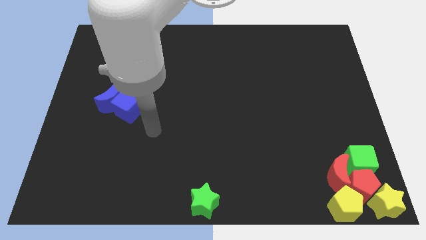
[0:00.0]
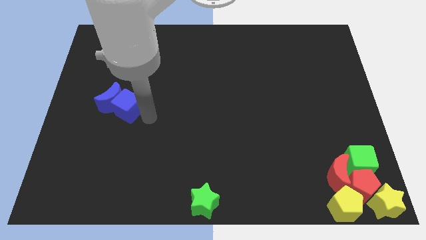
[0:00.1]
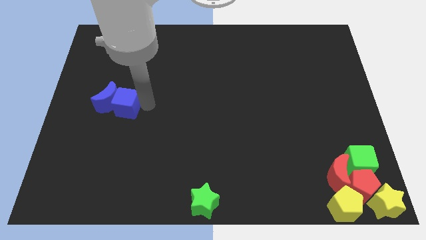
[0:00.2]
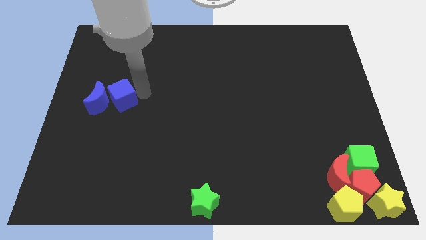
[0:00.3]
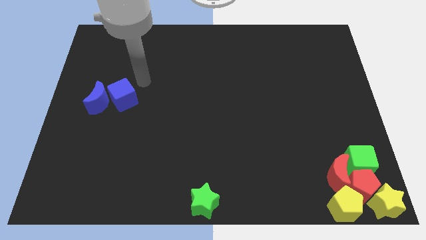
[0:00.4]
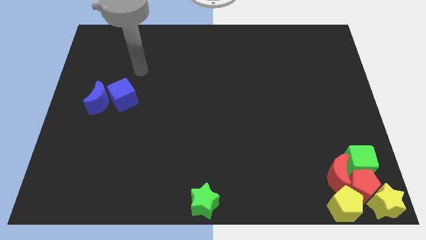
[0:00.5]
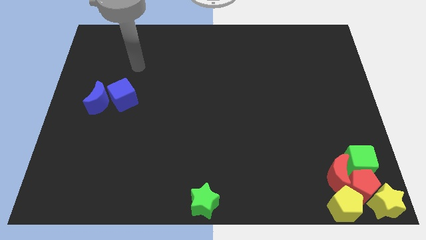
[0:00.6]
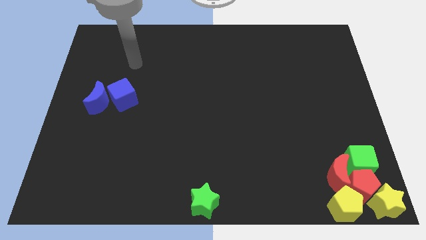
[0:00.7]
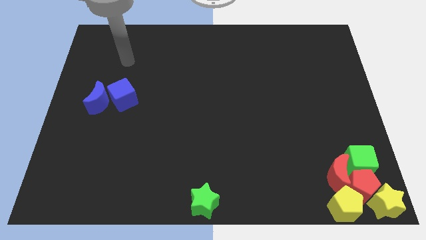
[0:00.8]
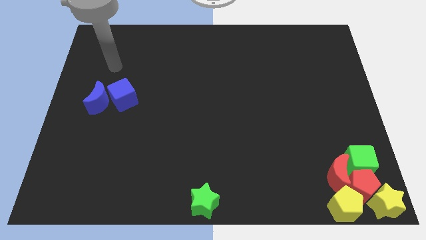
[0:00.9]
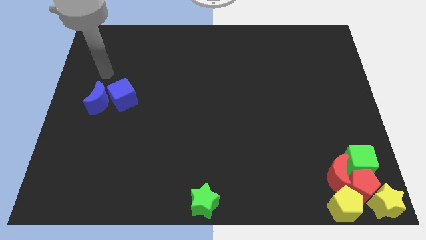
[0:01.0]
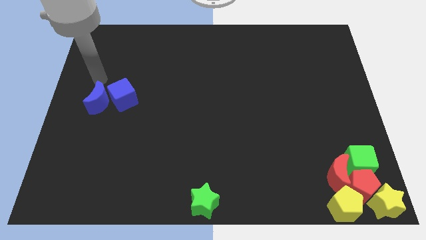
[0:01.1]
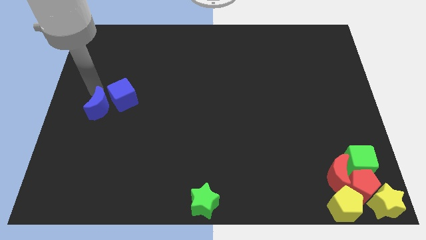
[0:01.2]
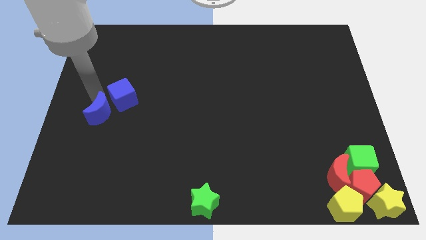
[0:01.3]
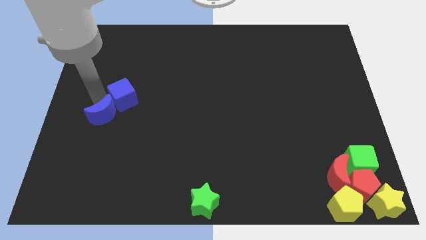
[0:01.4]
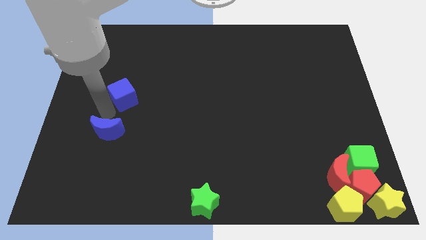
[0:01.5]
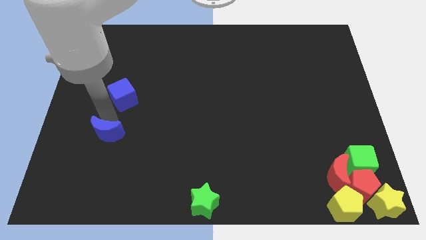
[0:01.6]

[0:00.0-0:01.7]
separate blue moon from the blue cube

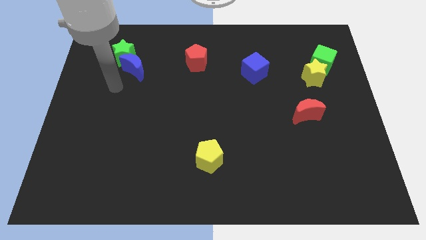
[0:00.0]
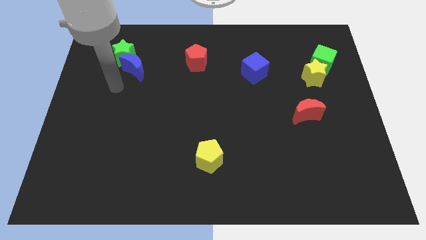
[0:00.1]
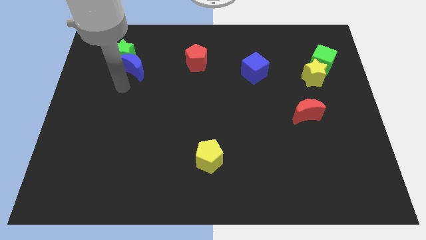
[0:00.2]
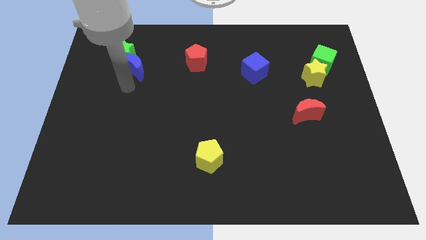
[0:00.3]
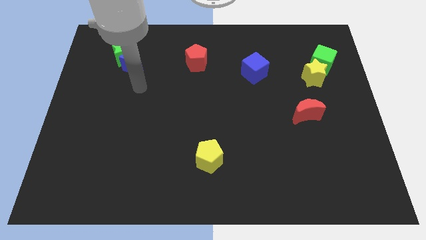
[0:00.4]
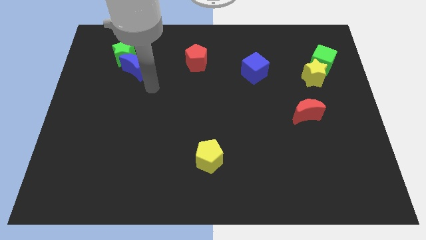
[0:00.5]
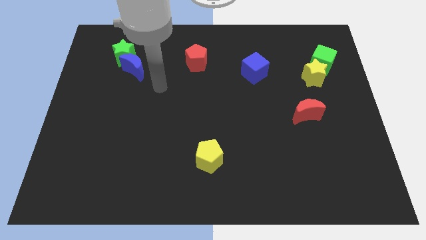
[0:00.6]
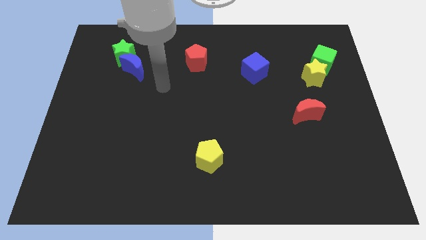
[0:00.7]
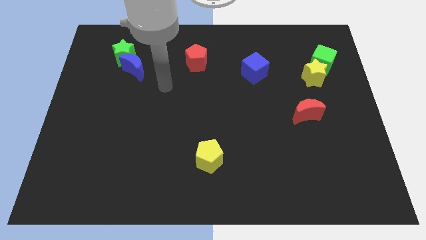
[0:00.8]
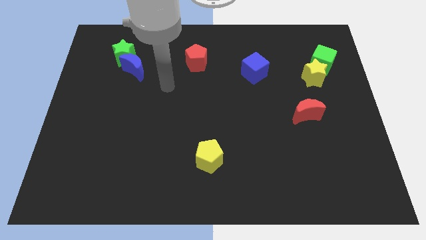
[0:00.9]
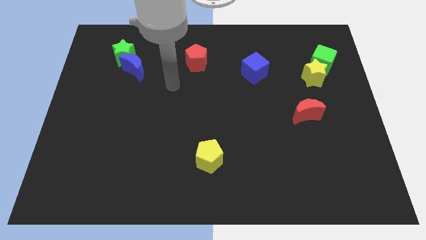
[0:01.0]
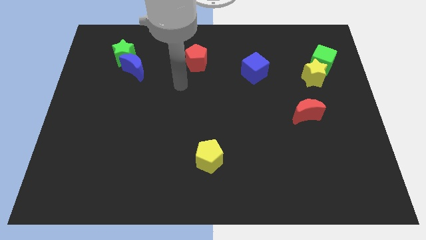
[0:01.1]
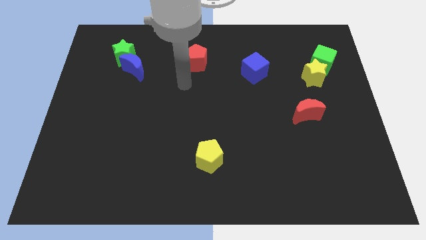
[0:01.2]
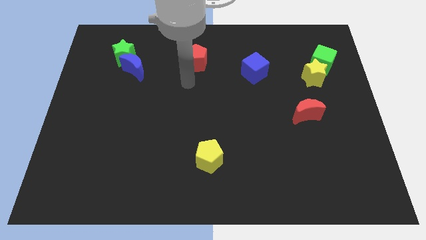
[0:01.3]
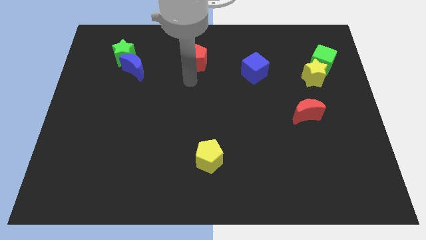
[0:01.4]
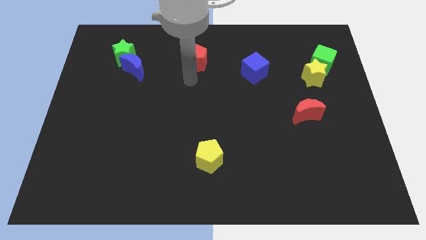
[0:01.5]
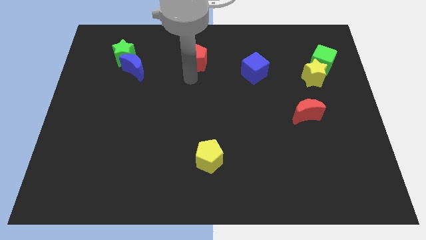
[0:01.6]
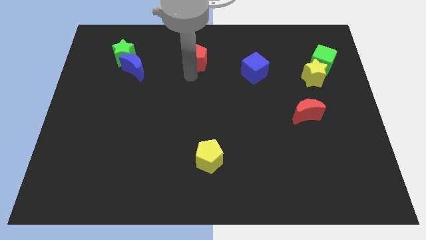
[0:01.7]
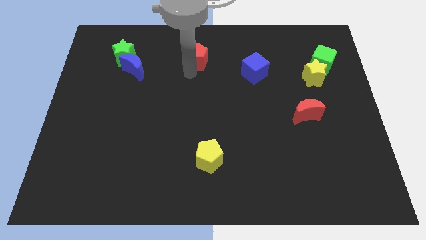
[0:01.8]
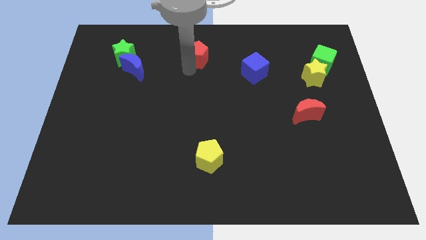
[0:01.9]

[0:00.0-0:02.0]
move the red pentagon slightly up

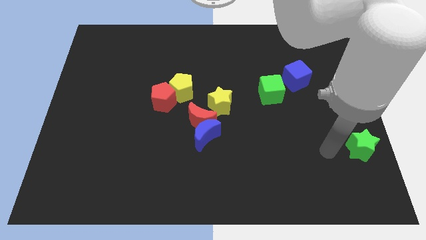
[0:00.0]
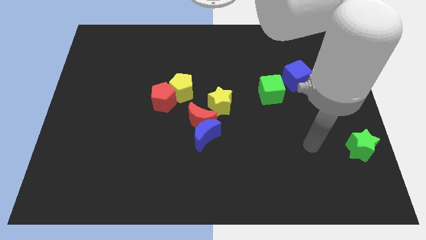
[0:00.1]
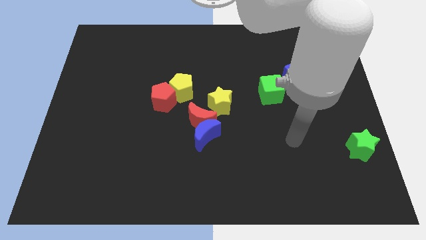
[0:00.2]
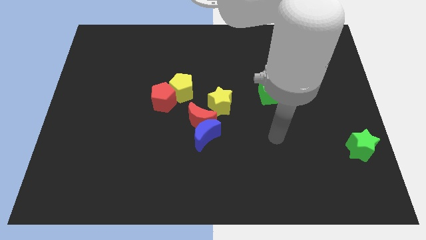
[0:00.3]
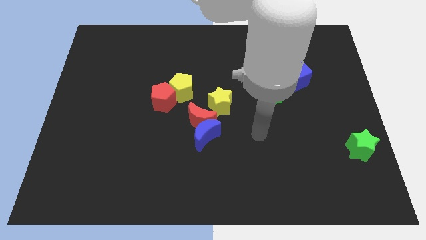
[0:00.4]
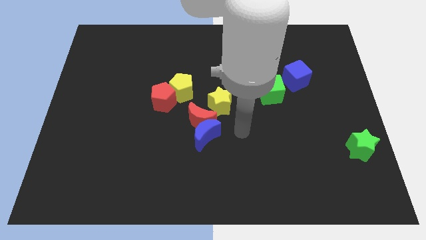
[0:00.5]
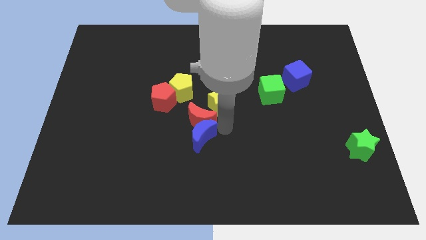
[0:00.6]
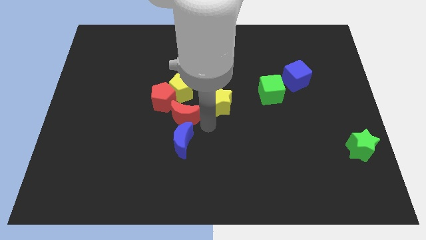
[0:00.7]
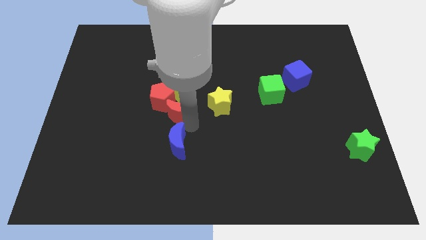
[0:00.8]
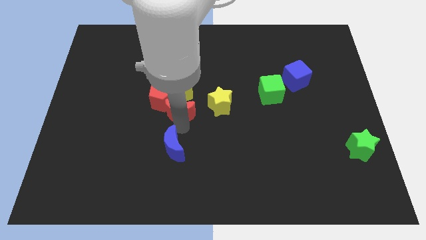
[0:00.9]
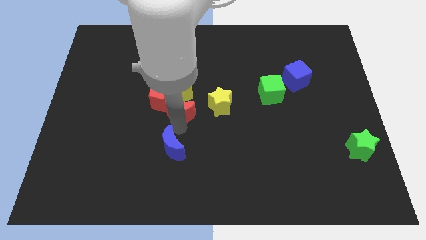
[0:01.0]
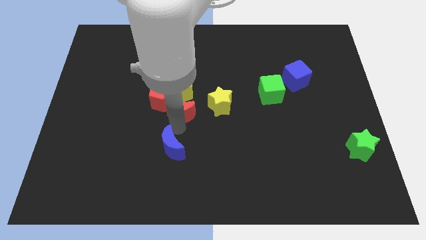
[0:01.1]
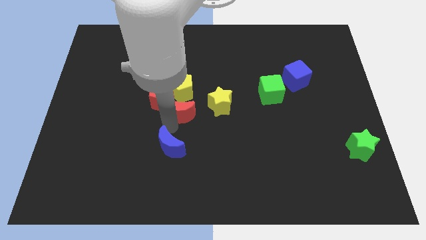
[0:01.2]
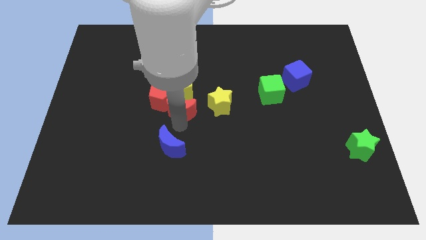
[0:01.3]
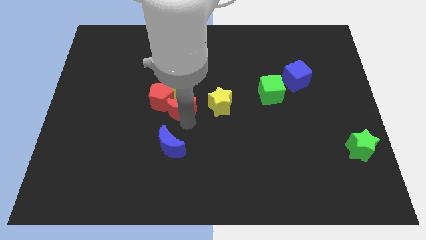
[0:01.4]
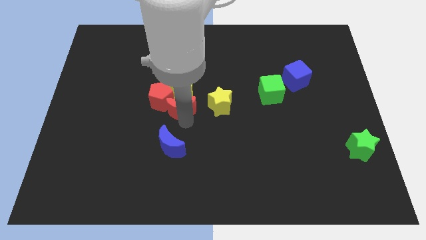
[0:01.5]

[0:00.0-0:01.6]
separate the blue moon and red moon from each other

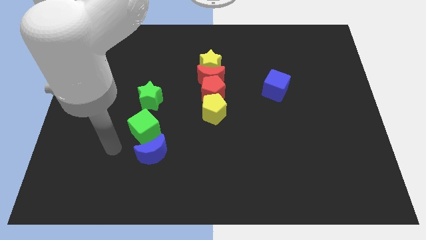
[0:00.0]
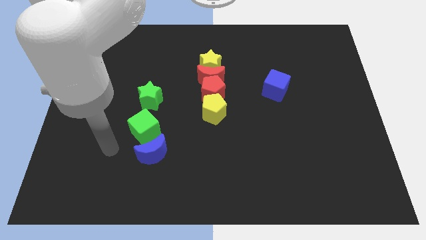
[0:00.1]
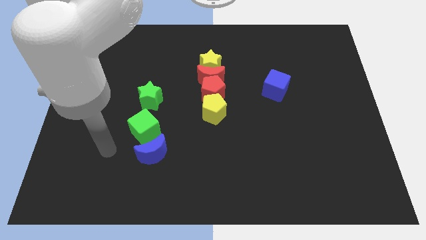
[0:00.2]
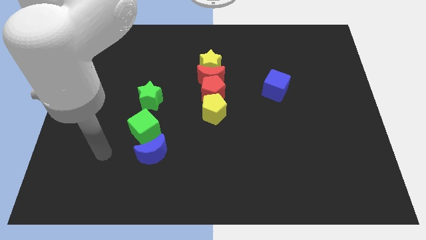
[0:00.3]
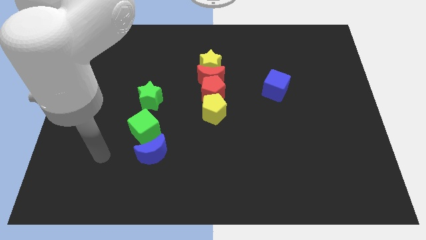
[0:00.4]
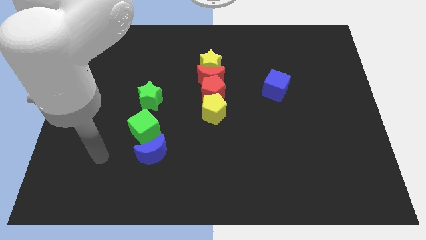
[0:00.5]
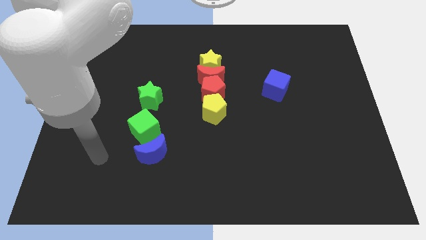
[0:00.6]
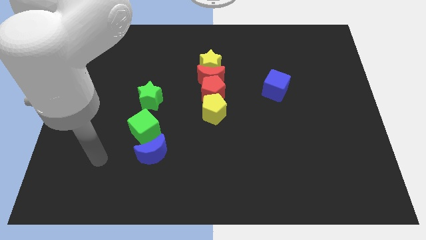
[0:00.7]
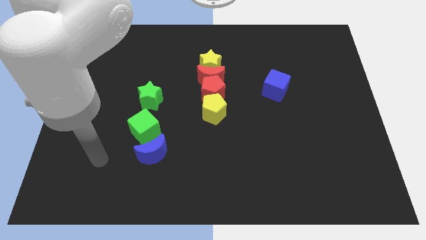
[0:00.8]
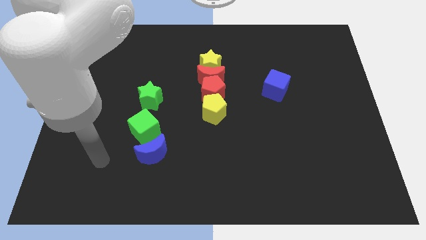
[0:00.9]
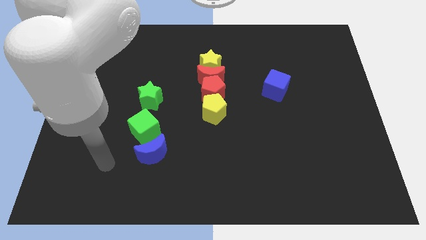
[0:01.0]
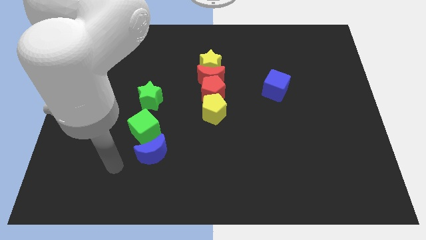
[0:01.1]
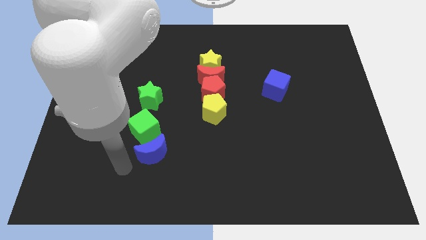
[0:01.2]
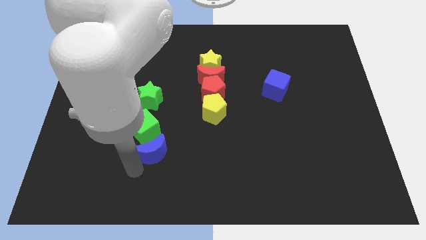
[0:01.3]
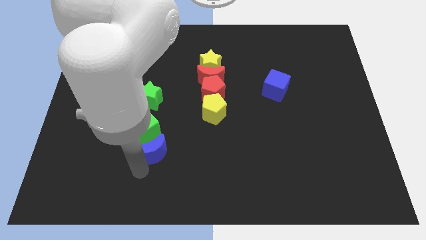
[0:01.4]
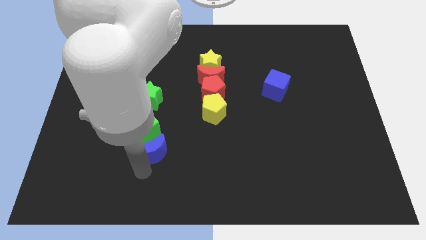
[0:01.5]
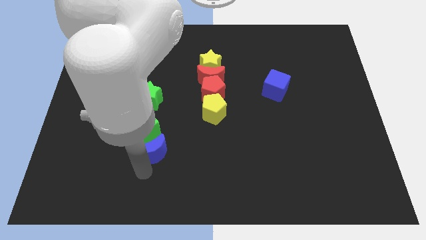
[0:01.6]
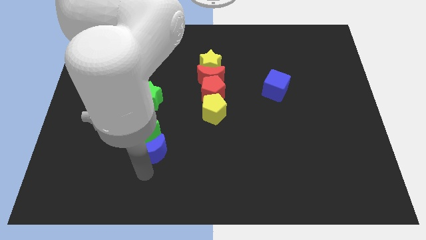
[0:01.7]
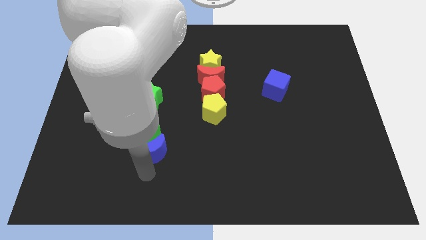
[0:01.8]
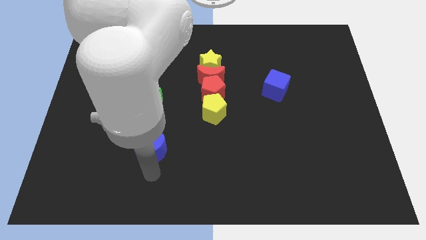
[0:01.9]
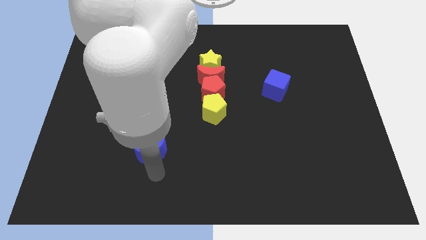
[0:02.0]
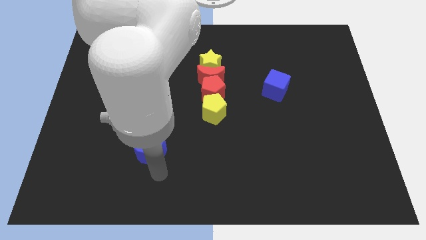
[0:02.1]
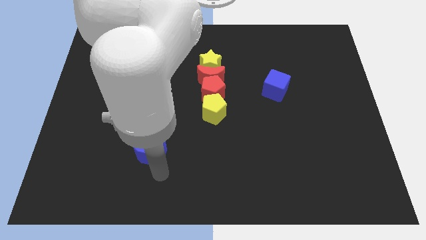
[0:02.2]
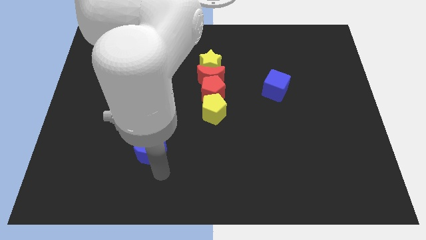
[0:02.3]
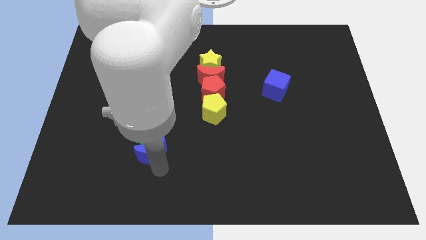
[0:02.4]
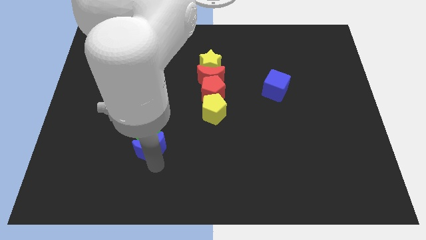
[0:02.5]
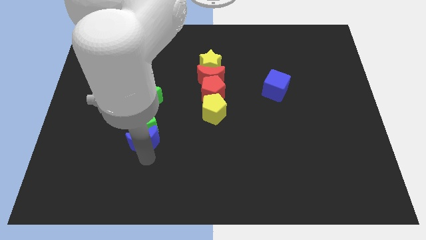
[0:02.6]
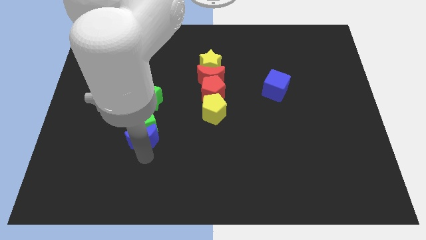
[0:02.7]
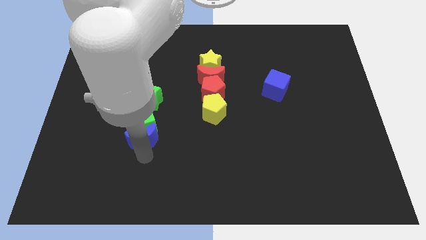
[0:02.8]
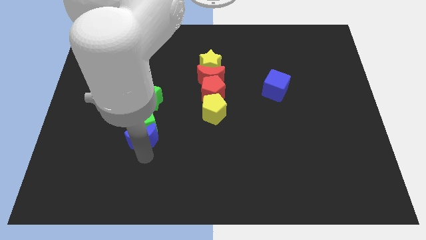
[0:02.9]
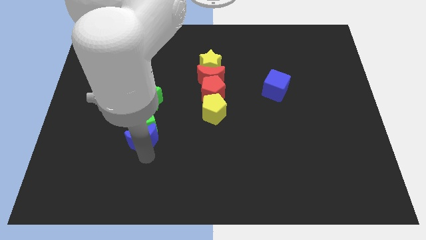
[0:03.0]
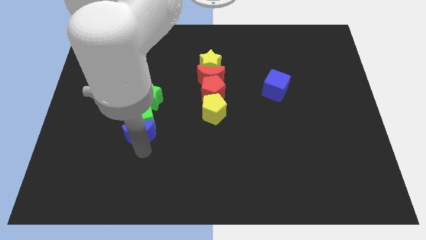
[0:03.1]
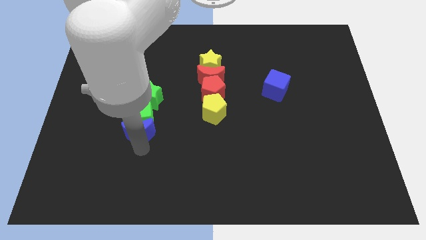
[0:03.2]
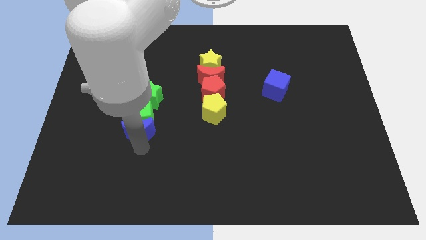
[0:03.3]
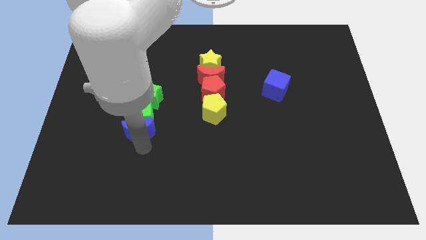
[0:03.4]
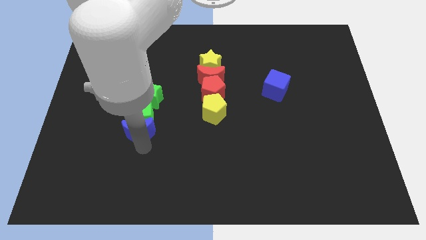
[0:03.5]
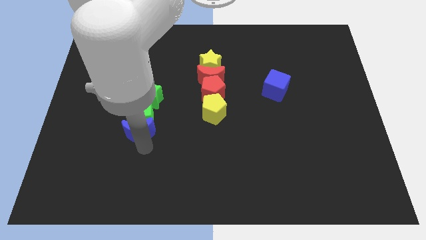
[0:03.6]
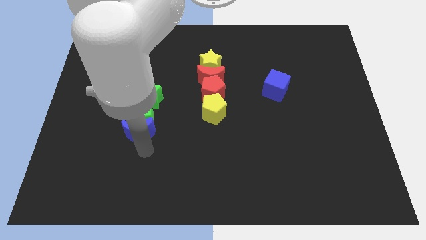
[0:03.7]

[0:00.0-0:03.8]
move the blue moon along with the green cube into the green star
